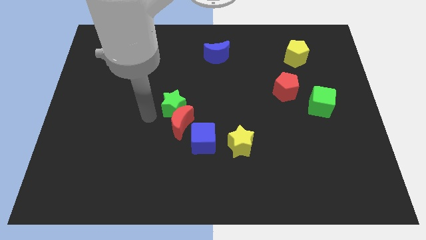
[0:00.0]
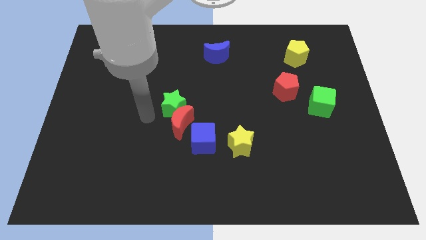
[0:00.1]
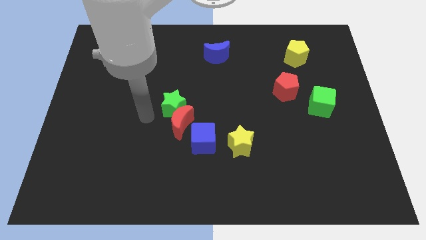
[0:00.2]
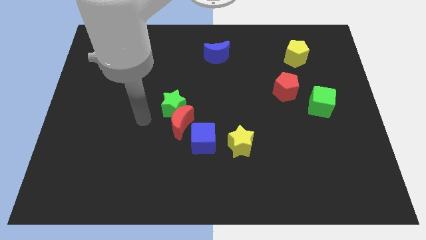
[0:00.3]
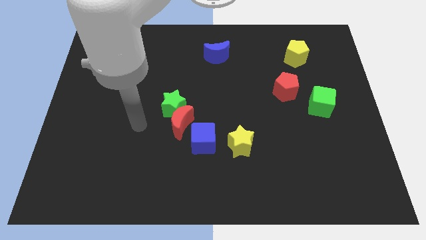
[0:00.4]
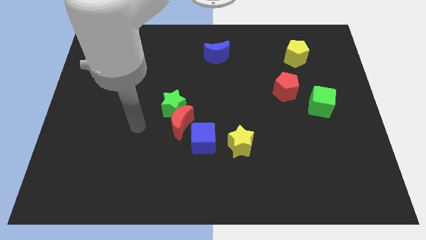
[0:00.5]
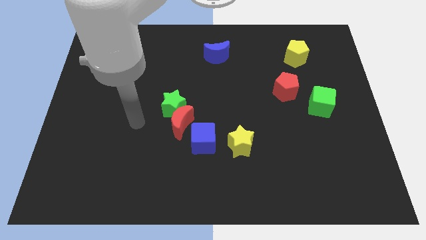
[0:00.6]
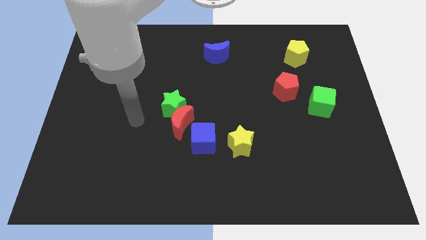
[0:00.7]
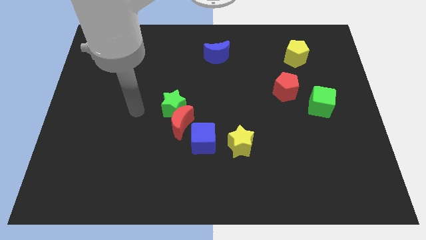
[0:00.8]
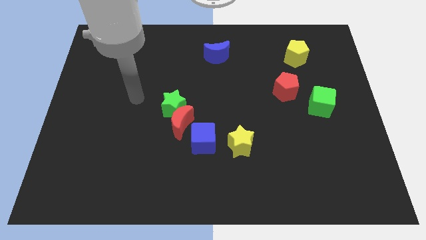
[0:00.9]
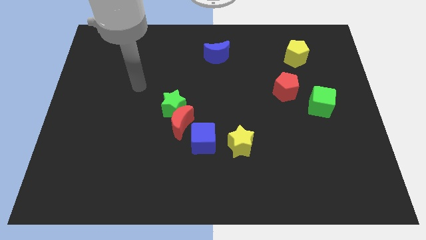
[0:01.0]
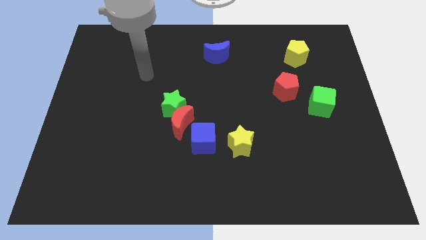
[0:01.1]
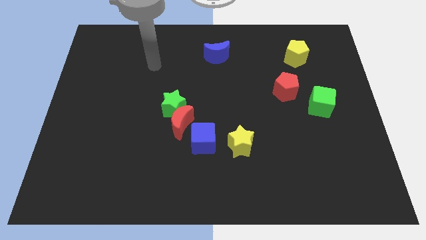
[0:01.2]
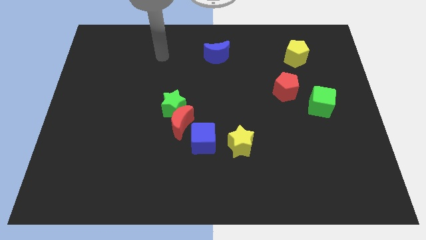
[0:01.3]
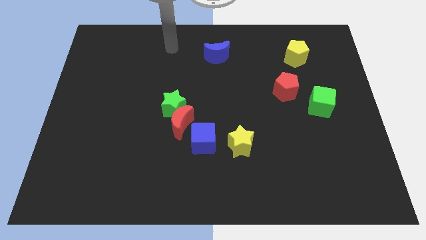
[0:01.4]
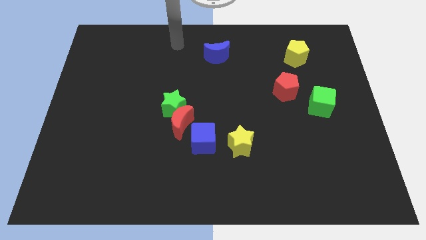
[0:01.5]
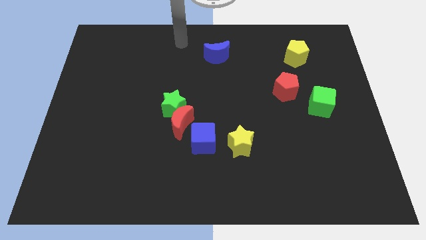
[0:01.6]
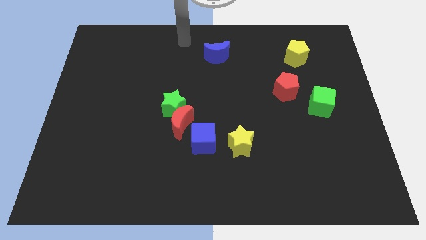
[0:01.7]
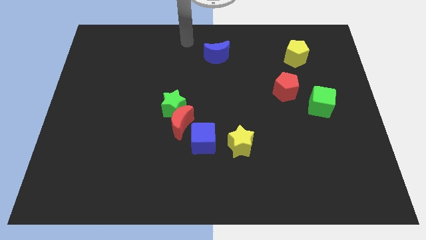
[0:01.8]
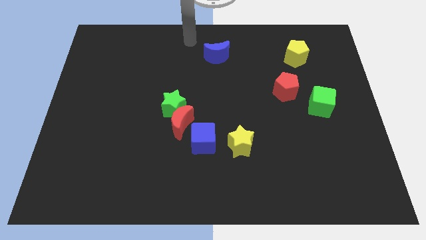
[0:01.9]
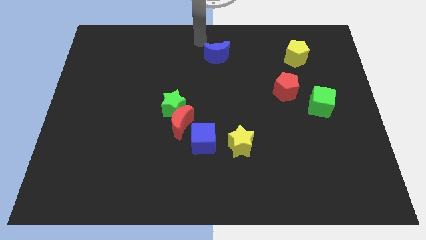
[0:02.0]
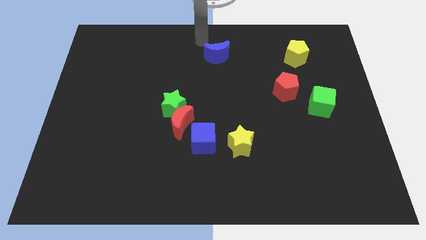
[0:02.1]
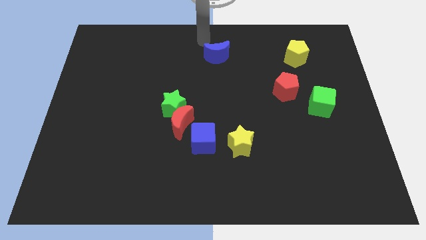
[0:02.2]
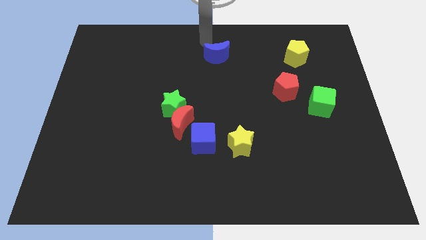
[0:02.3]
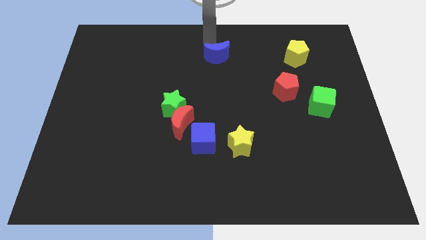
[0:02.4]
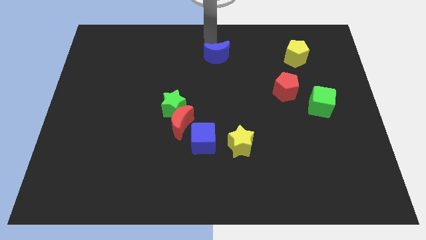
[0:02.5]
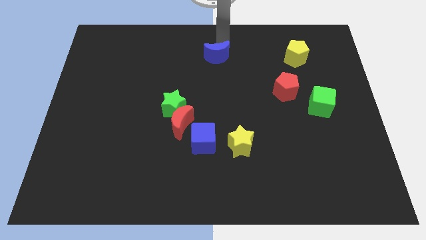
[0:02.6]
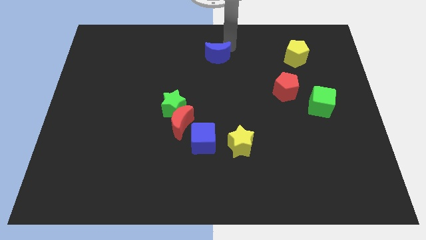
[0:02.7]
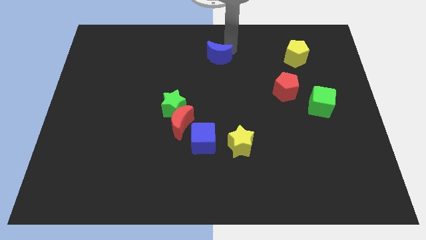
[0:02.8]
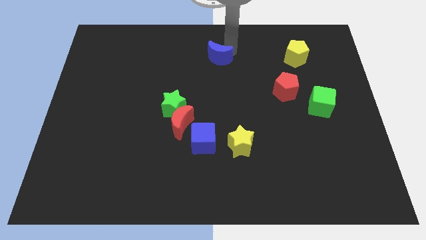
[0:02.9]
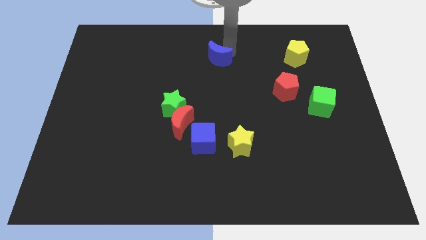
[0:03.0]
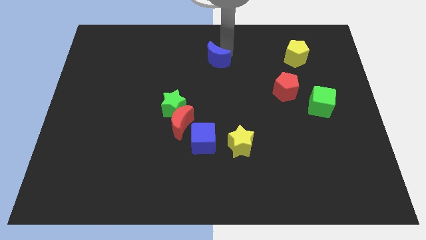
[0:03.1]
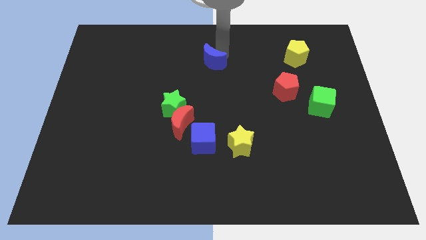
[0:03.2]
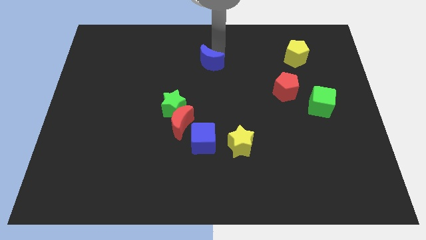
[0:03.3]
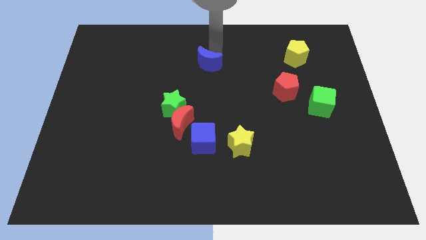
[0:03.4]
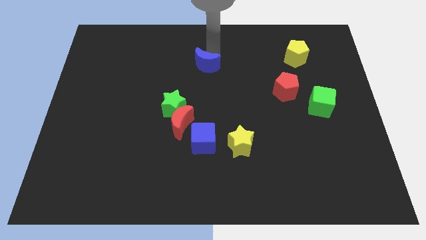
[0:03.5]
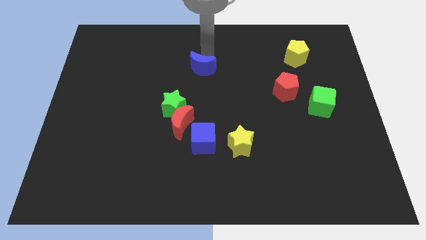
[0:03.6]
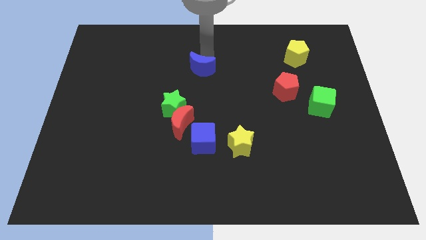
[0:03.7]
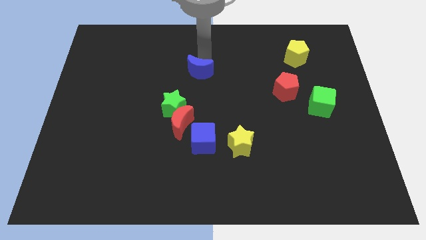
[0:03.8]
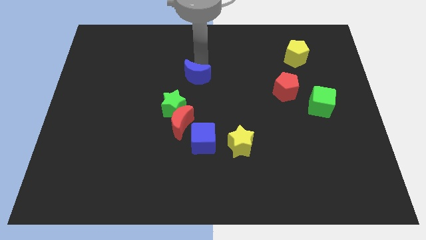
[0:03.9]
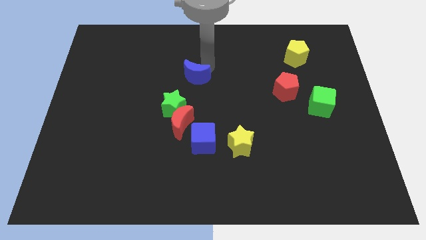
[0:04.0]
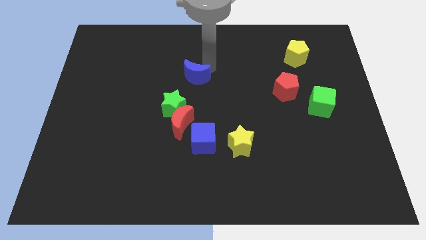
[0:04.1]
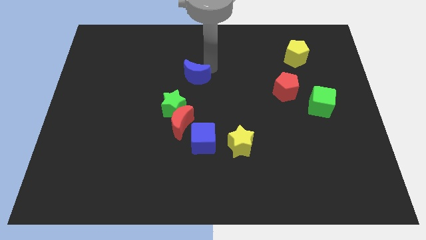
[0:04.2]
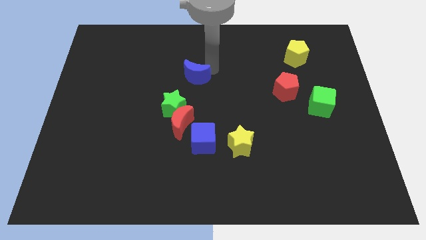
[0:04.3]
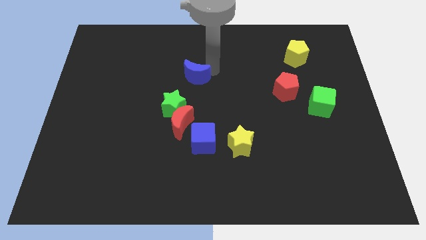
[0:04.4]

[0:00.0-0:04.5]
place the blue moon diagonally to green star

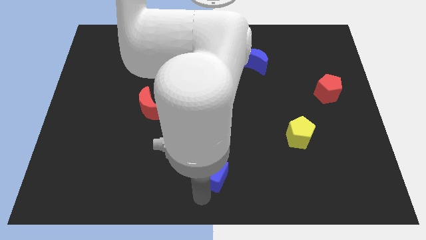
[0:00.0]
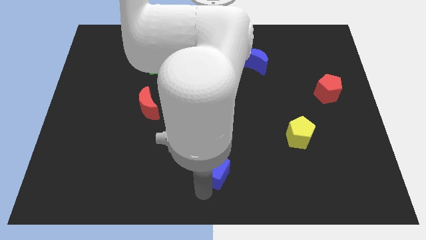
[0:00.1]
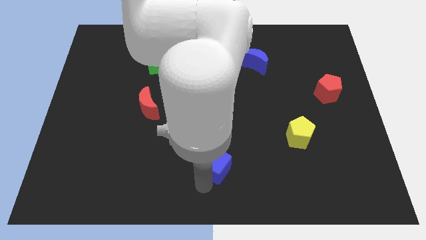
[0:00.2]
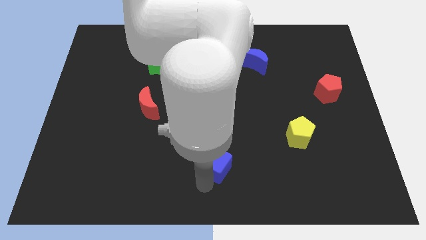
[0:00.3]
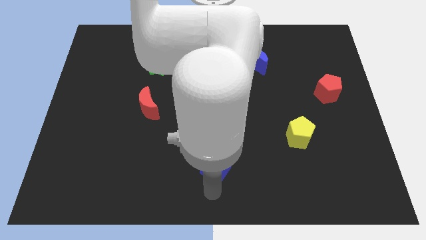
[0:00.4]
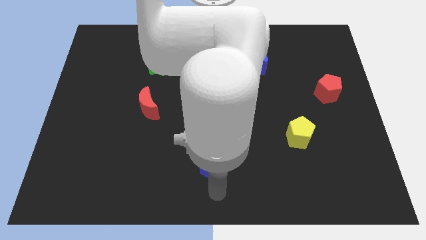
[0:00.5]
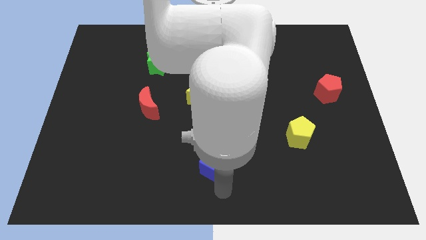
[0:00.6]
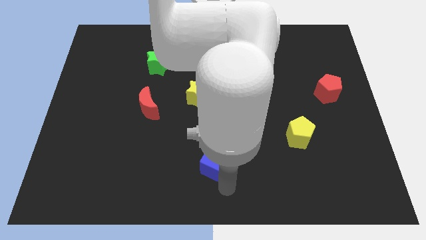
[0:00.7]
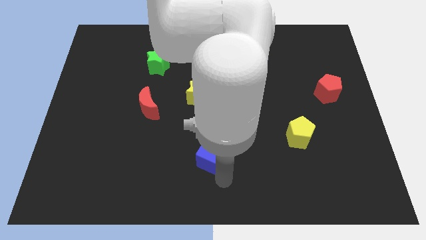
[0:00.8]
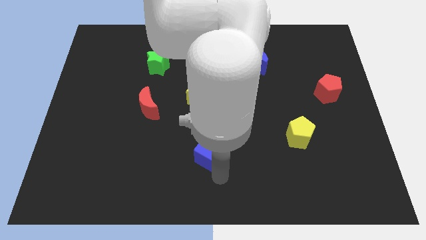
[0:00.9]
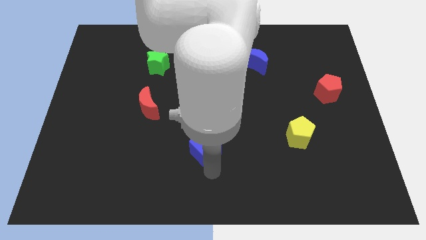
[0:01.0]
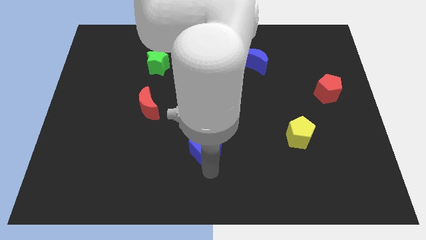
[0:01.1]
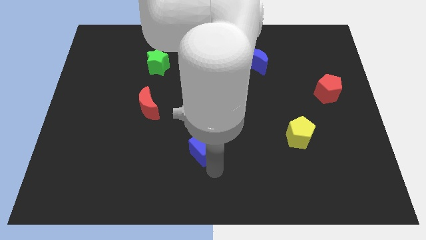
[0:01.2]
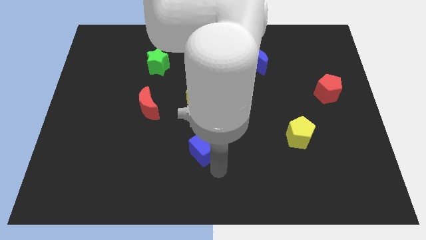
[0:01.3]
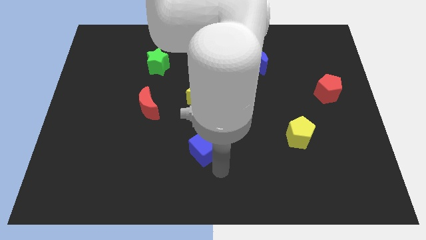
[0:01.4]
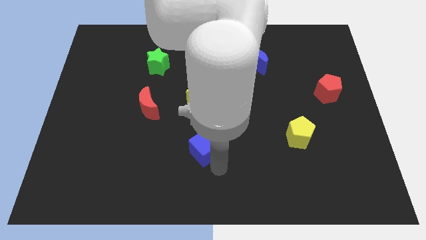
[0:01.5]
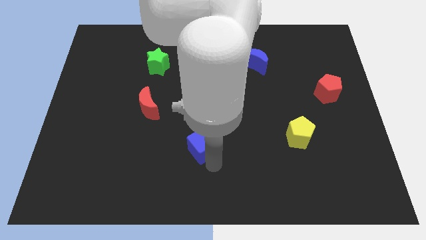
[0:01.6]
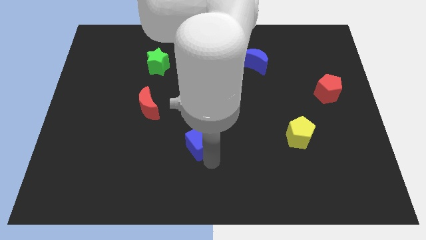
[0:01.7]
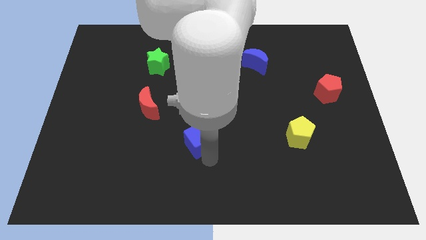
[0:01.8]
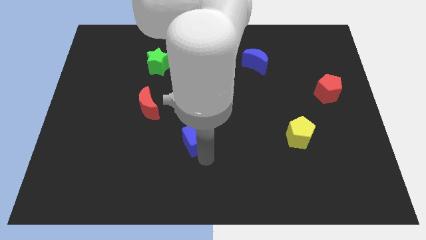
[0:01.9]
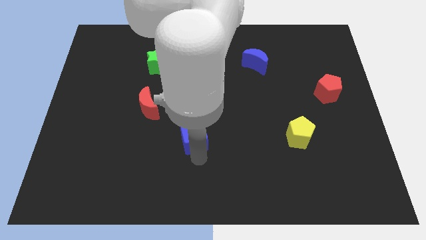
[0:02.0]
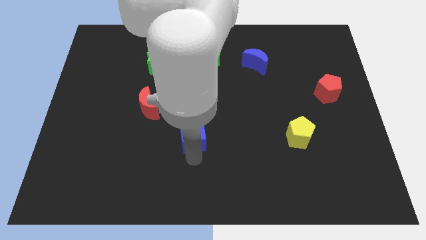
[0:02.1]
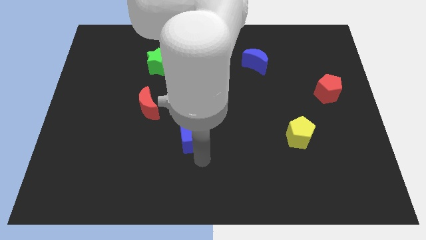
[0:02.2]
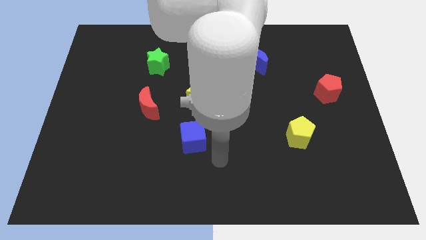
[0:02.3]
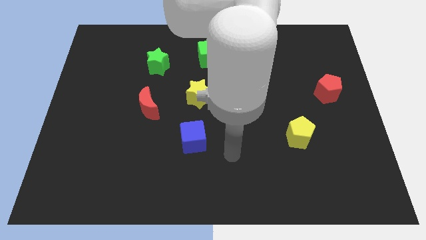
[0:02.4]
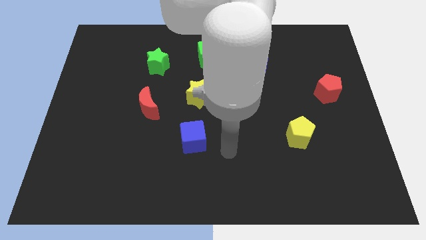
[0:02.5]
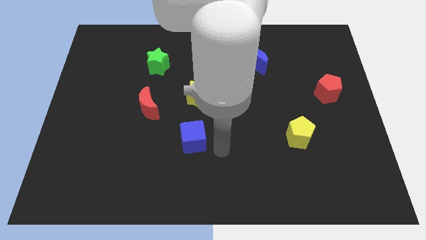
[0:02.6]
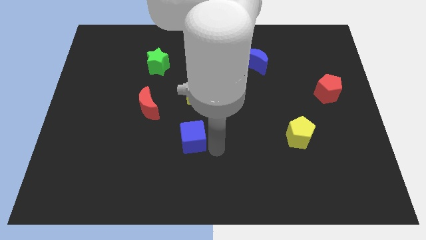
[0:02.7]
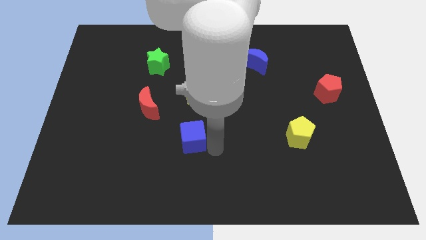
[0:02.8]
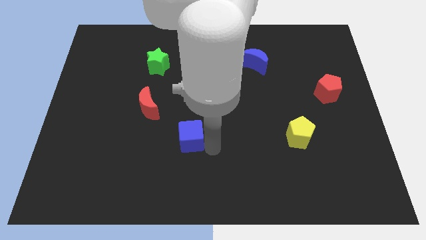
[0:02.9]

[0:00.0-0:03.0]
push the blue cube to the left of the yellow pentagon

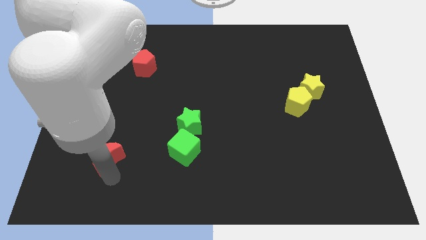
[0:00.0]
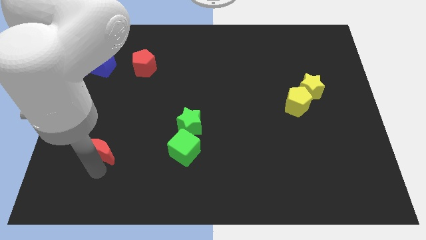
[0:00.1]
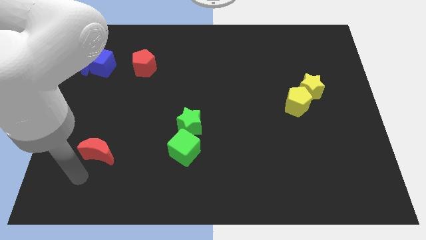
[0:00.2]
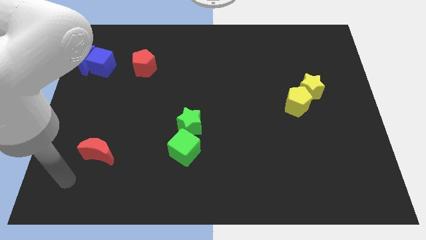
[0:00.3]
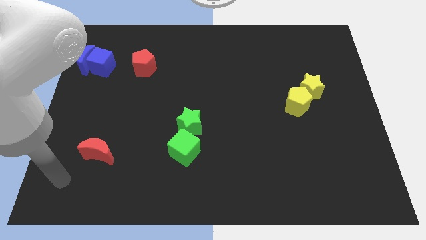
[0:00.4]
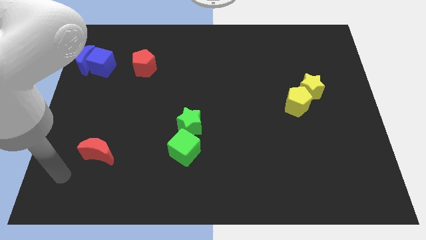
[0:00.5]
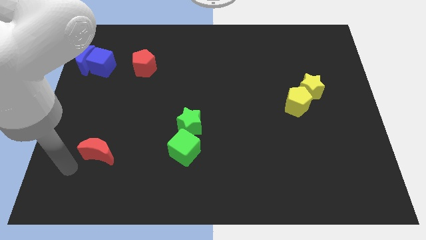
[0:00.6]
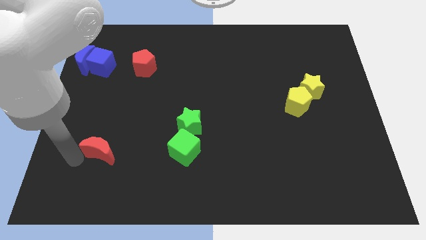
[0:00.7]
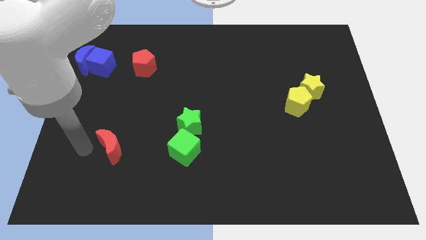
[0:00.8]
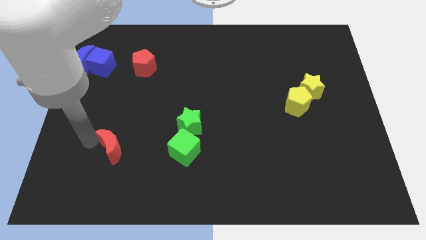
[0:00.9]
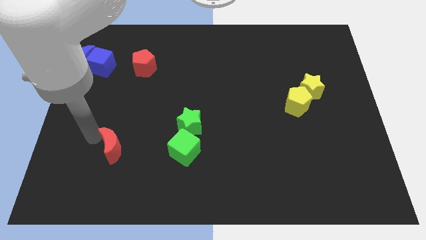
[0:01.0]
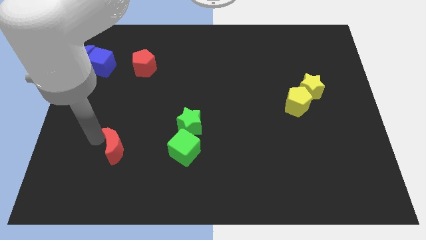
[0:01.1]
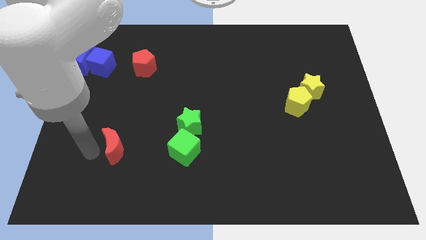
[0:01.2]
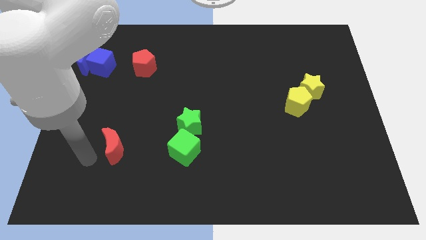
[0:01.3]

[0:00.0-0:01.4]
slightly push the red crescent towards the center of the board
